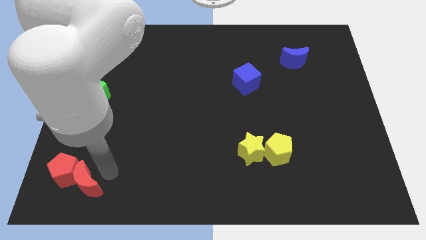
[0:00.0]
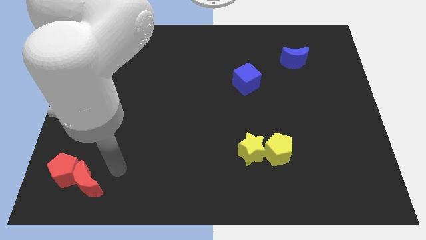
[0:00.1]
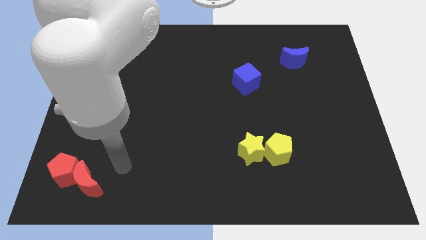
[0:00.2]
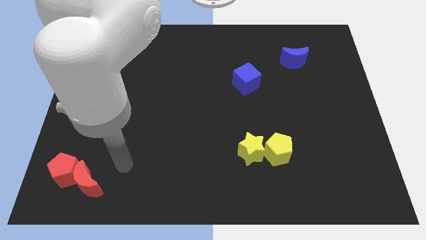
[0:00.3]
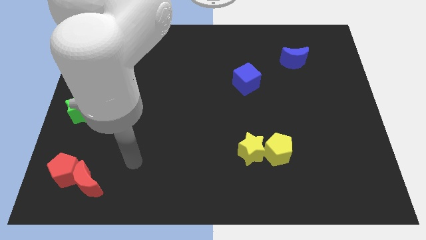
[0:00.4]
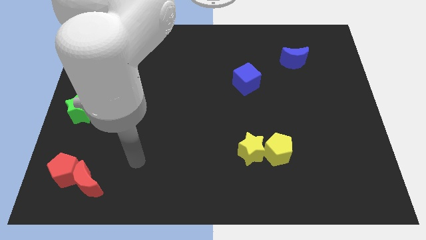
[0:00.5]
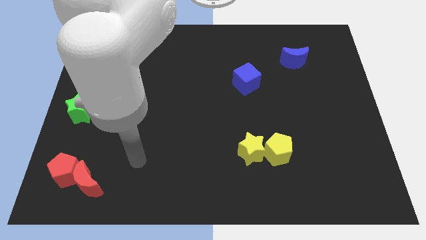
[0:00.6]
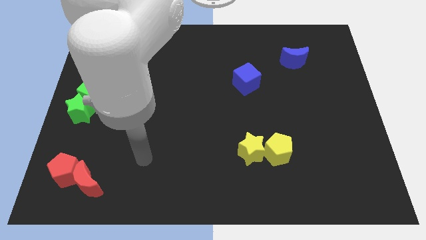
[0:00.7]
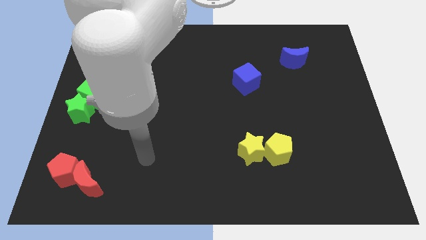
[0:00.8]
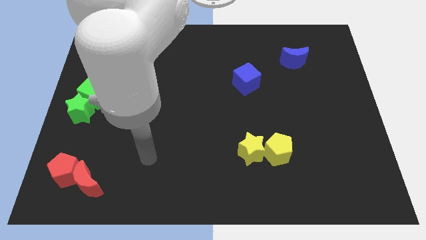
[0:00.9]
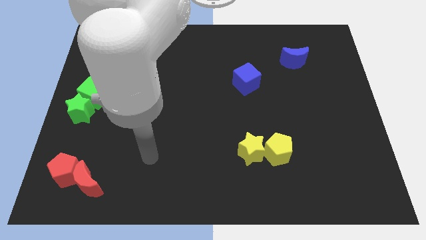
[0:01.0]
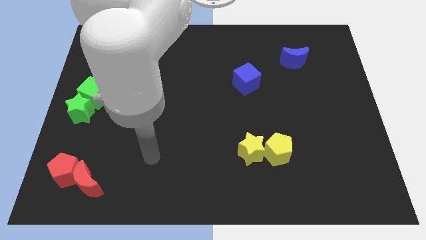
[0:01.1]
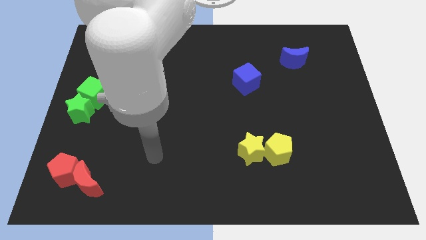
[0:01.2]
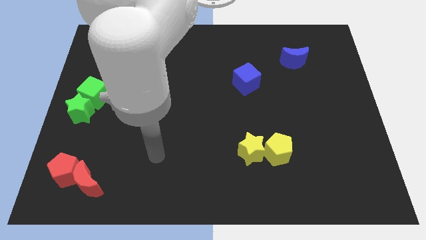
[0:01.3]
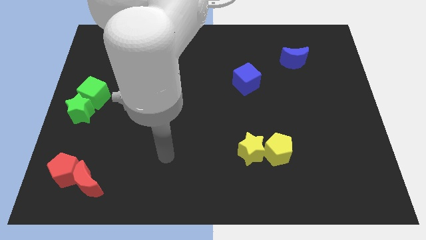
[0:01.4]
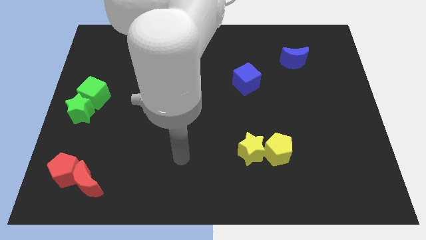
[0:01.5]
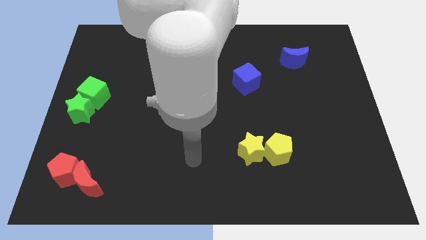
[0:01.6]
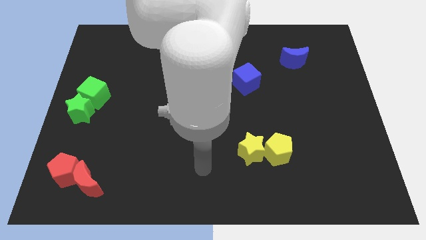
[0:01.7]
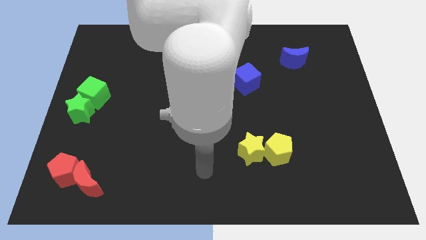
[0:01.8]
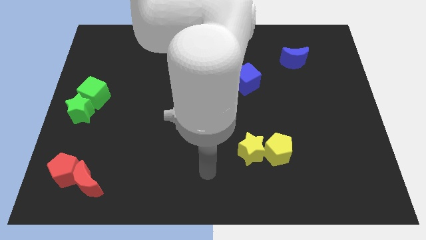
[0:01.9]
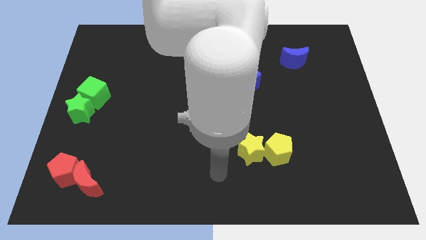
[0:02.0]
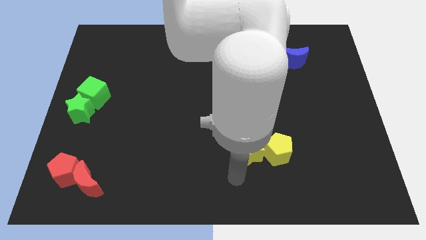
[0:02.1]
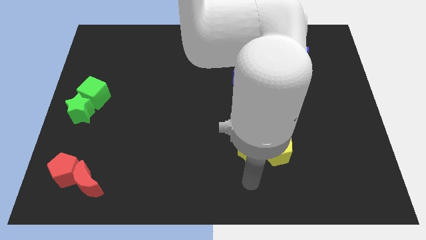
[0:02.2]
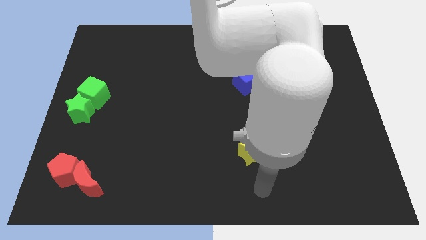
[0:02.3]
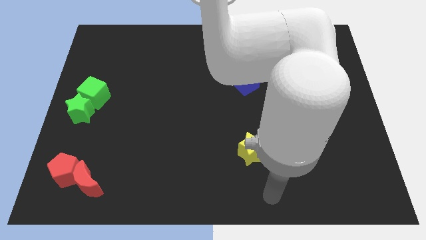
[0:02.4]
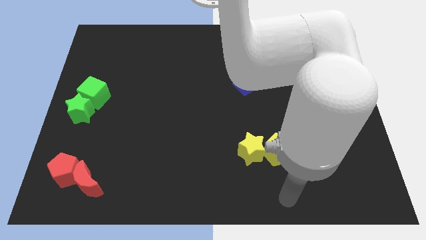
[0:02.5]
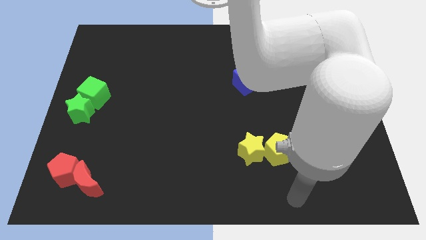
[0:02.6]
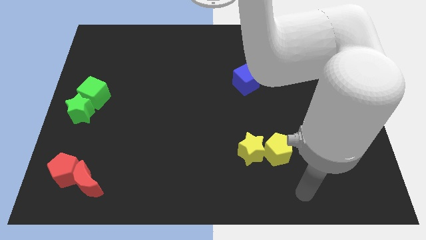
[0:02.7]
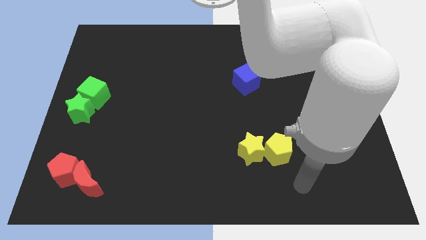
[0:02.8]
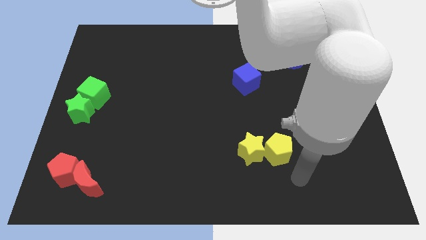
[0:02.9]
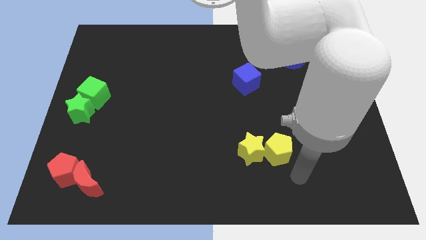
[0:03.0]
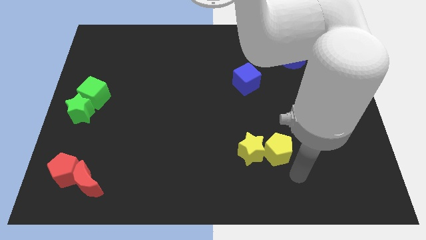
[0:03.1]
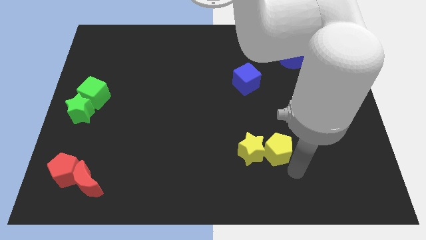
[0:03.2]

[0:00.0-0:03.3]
point your arm below bottom right of the yellow pentagon

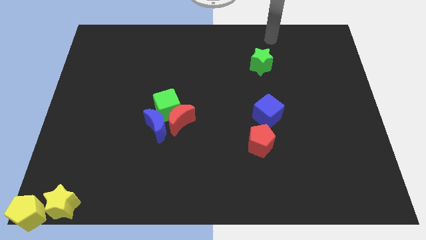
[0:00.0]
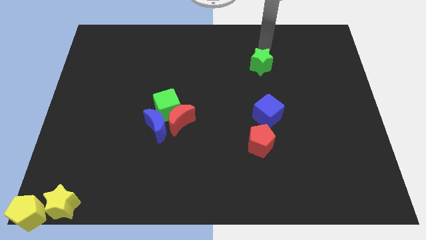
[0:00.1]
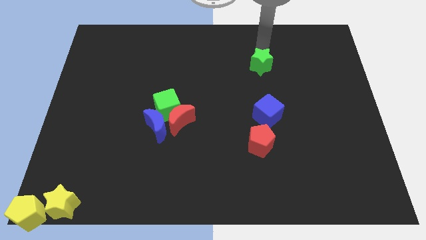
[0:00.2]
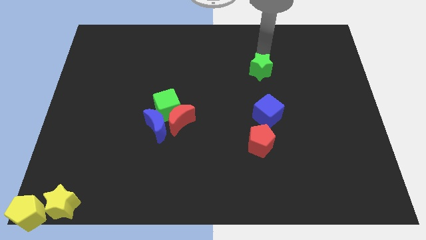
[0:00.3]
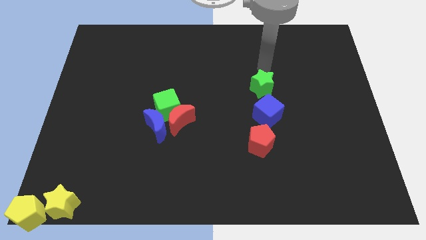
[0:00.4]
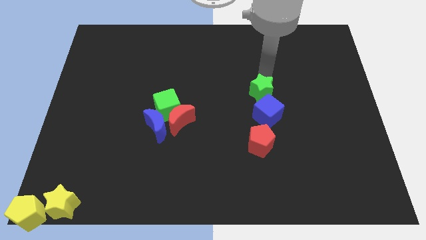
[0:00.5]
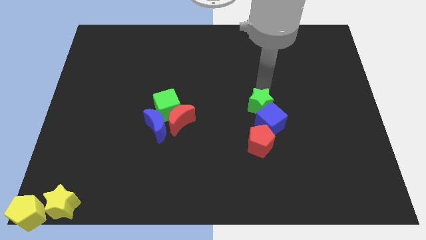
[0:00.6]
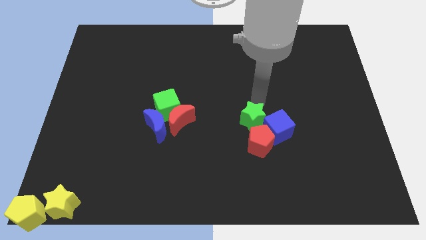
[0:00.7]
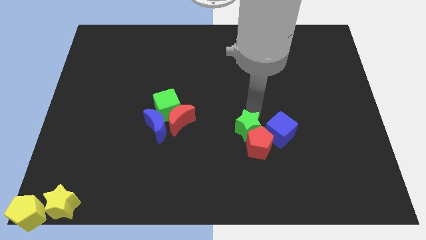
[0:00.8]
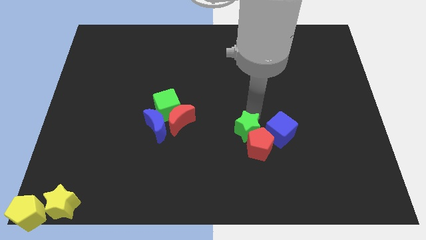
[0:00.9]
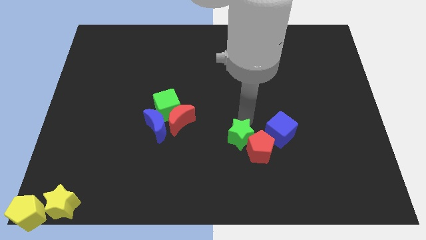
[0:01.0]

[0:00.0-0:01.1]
push the green star into the red pentagon

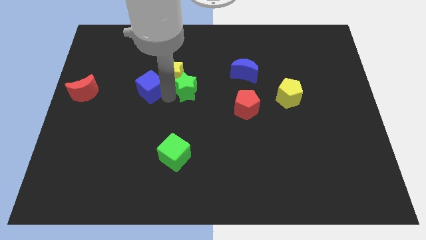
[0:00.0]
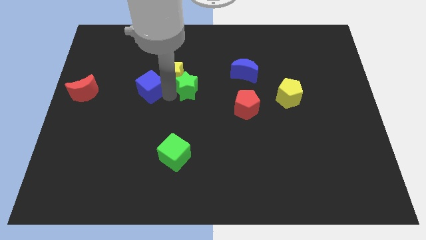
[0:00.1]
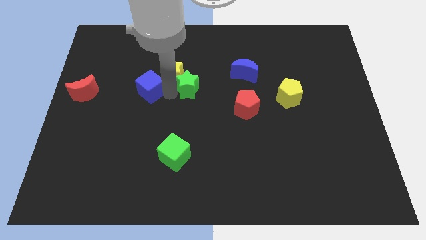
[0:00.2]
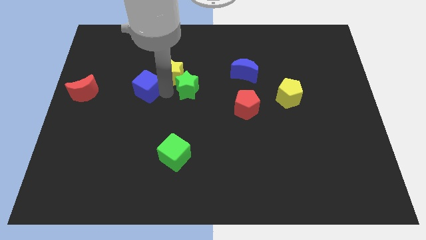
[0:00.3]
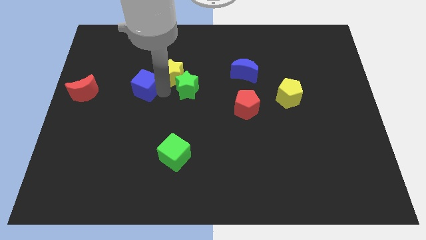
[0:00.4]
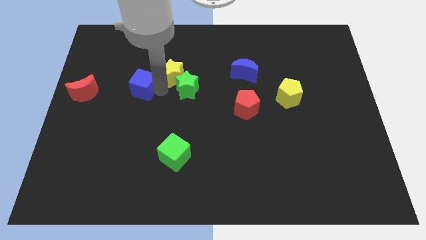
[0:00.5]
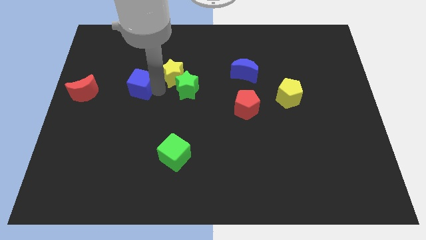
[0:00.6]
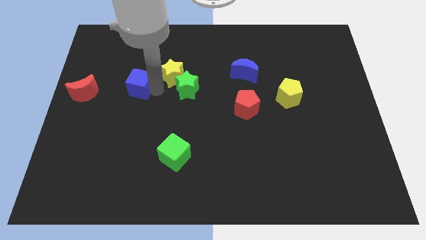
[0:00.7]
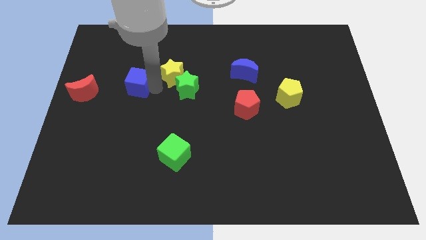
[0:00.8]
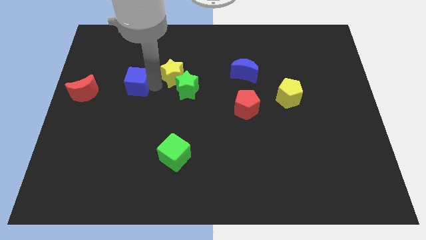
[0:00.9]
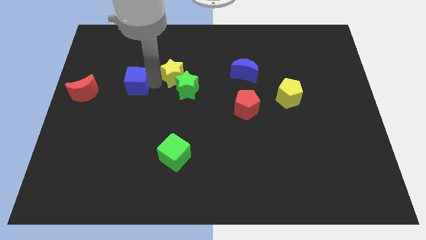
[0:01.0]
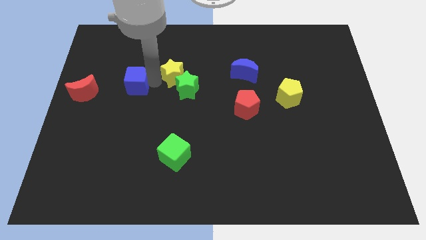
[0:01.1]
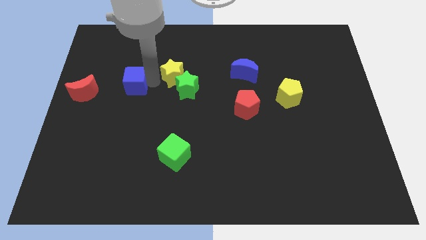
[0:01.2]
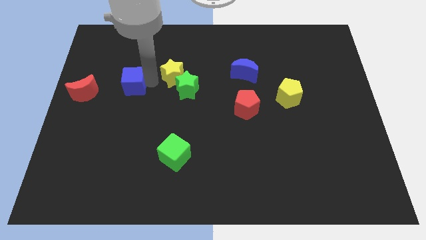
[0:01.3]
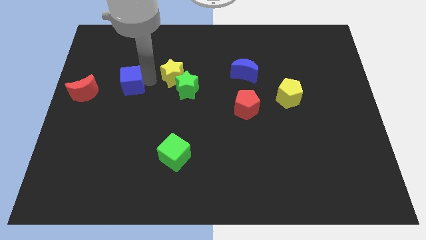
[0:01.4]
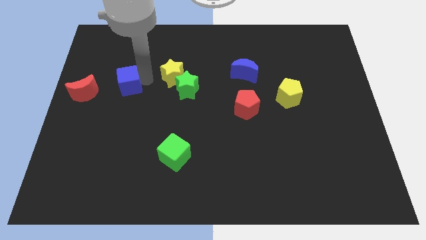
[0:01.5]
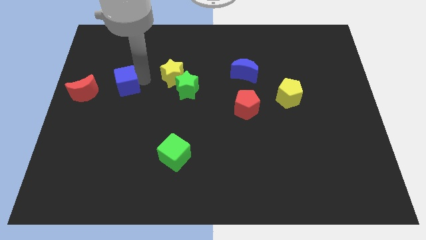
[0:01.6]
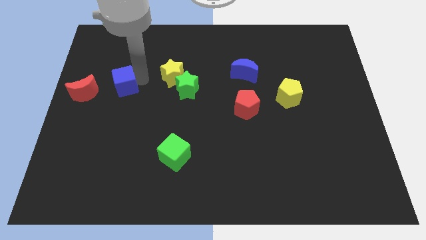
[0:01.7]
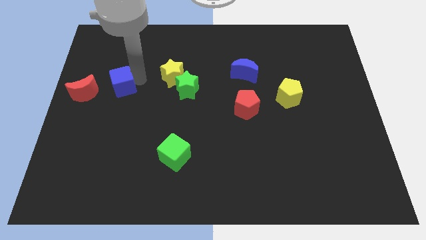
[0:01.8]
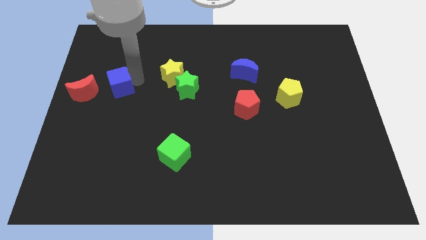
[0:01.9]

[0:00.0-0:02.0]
place the blue cube parallel to the red crescent

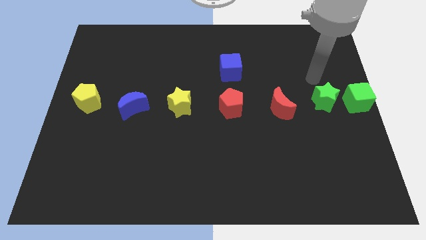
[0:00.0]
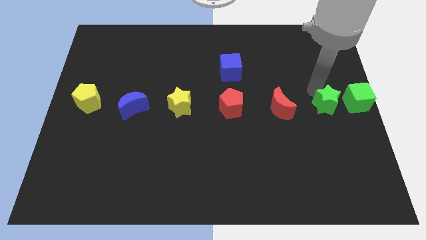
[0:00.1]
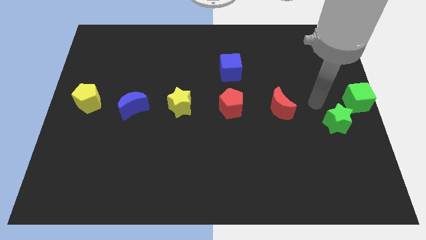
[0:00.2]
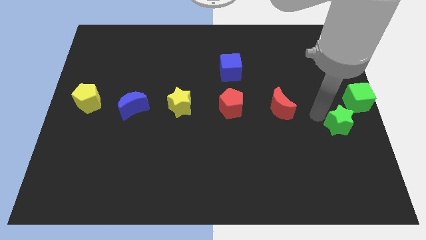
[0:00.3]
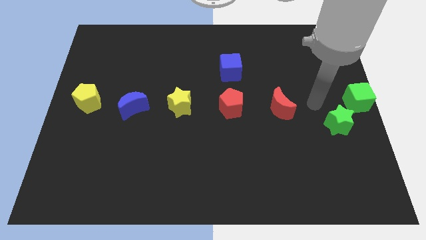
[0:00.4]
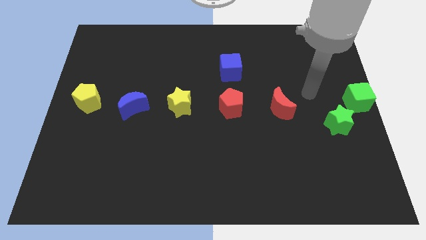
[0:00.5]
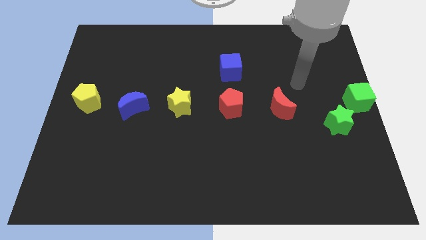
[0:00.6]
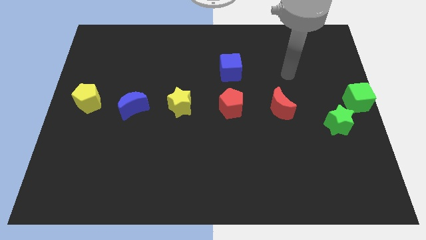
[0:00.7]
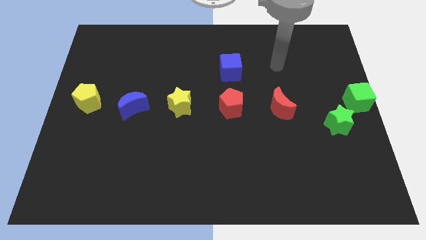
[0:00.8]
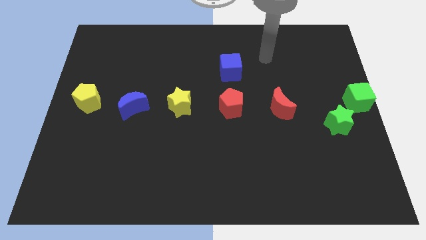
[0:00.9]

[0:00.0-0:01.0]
push the green star downwards

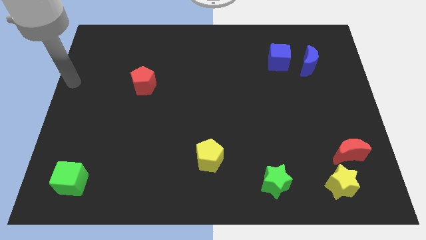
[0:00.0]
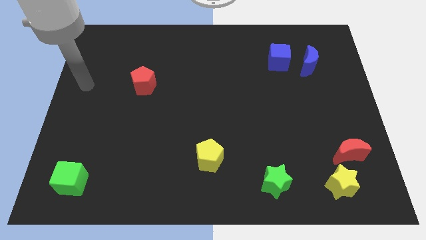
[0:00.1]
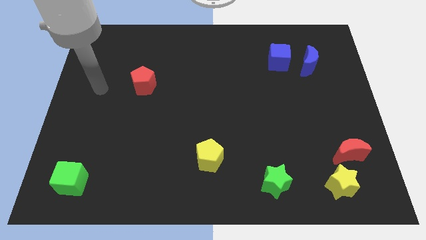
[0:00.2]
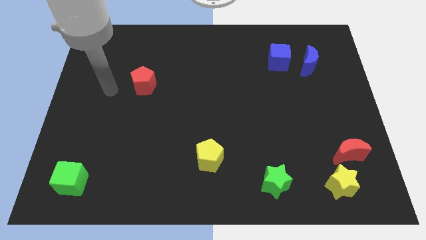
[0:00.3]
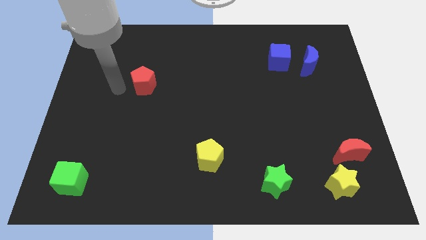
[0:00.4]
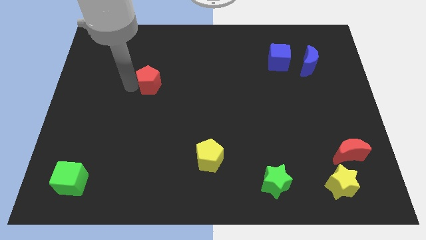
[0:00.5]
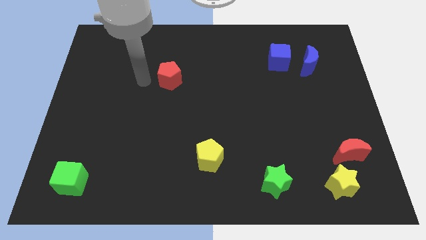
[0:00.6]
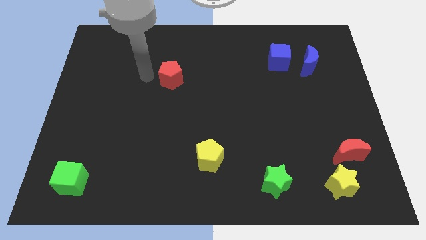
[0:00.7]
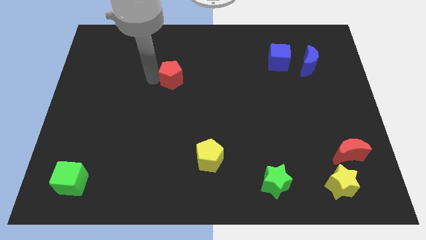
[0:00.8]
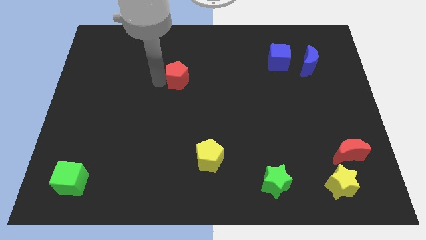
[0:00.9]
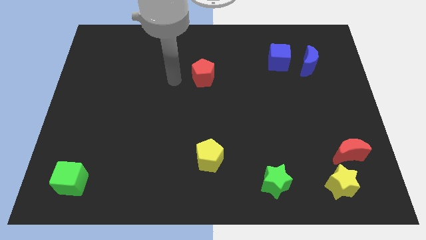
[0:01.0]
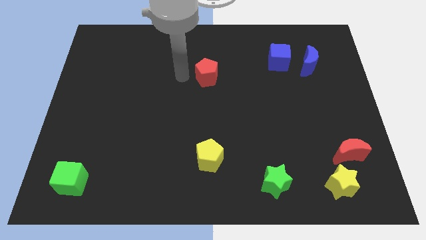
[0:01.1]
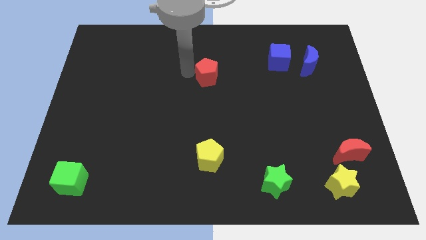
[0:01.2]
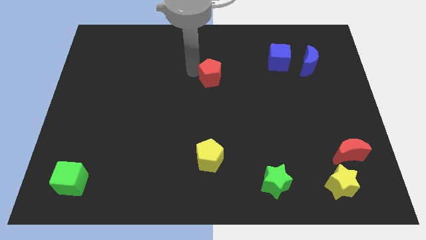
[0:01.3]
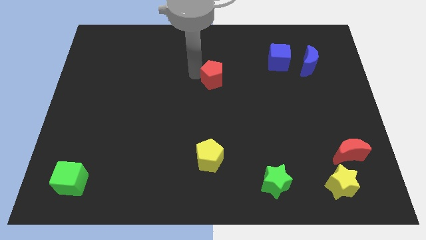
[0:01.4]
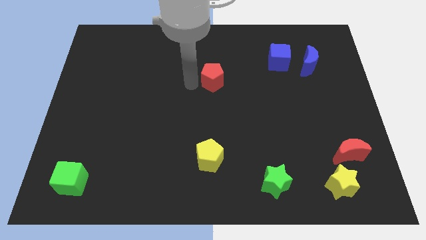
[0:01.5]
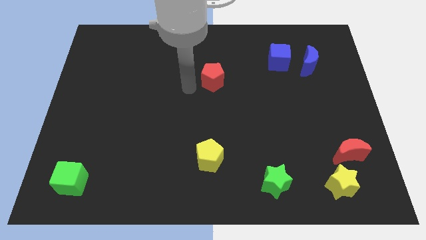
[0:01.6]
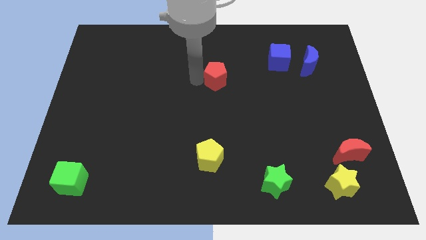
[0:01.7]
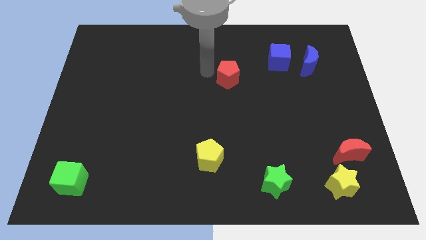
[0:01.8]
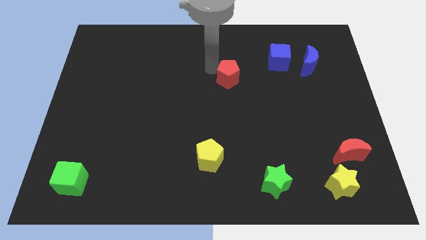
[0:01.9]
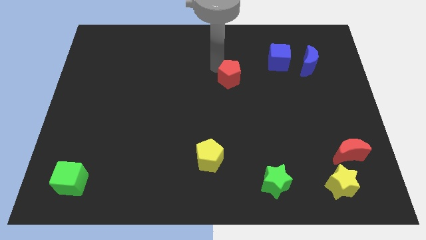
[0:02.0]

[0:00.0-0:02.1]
slide red pentagon above the yellow pentagon vertically
